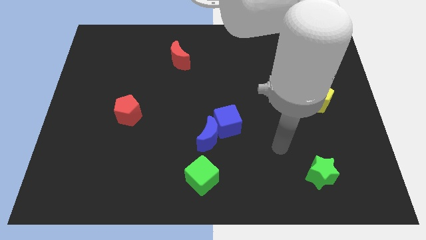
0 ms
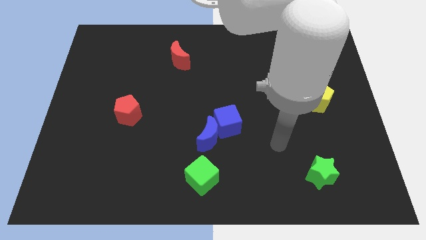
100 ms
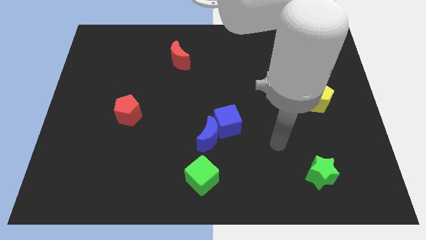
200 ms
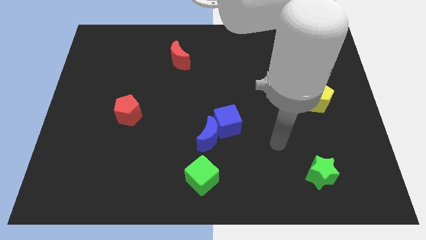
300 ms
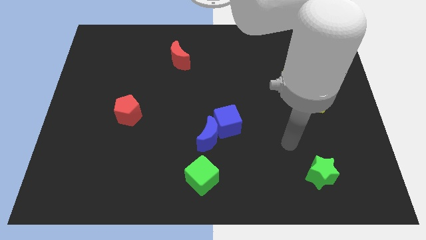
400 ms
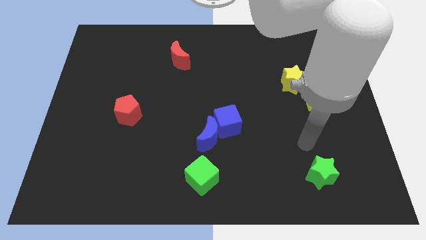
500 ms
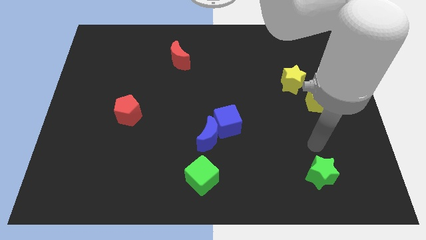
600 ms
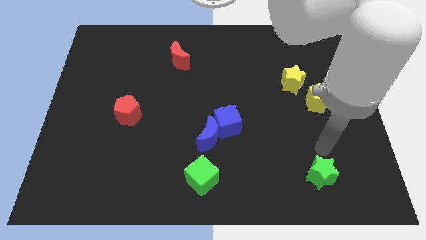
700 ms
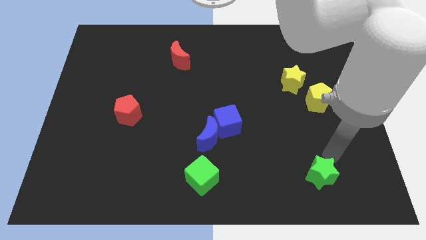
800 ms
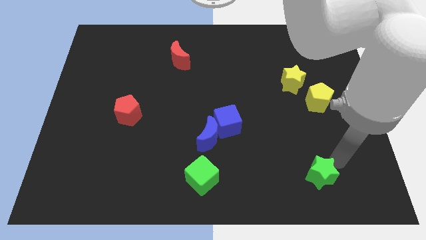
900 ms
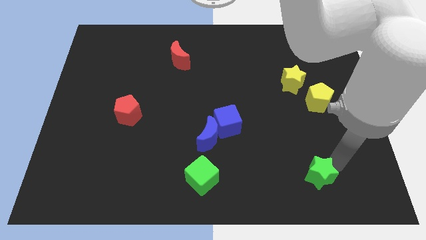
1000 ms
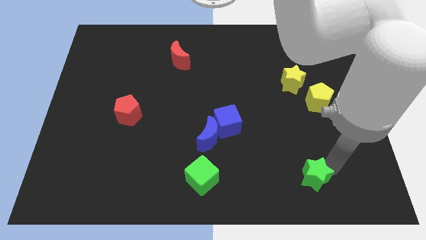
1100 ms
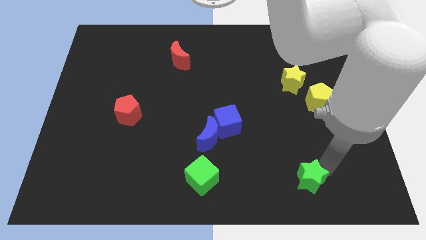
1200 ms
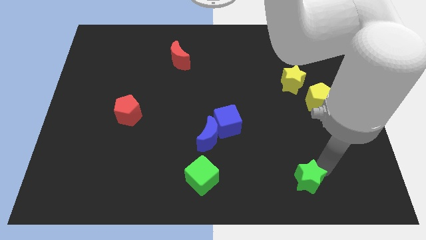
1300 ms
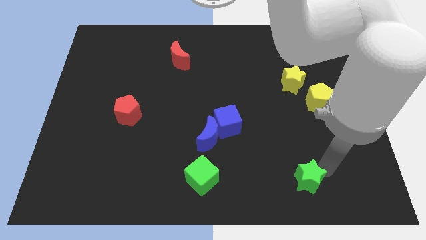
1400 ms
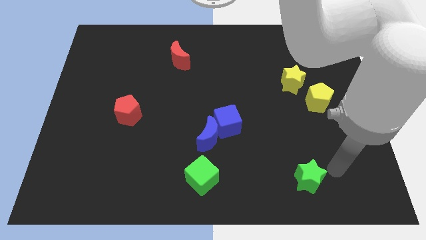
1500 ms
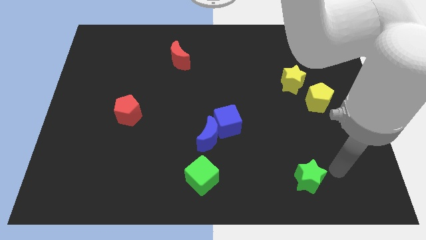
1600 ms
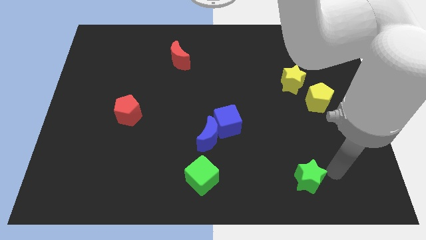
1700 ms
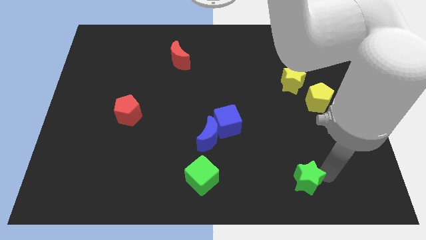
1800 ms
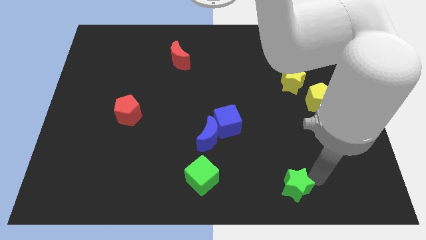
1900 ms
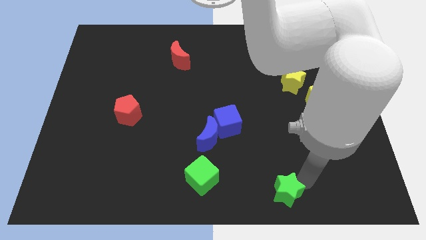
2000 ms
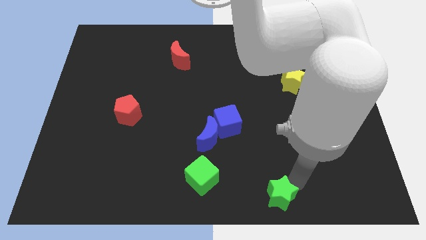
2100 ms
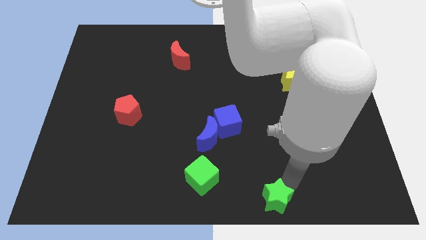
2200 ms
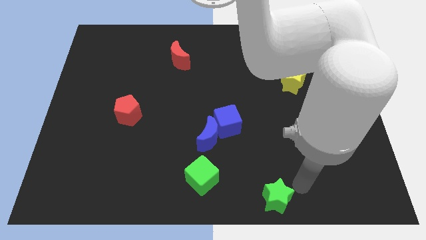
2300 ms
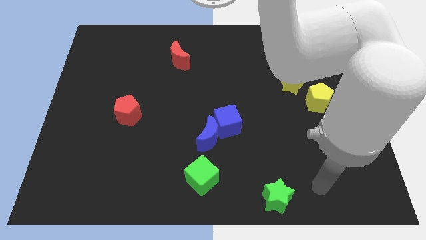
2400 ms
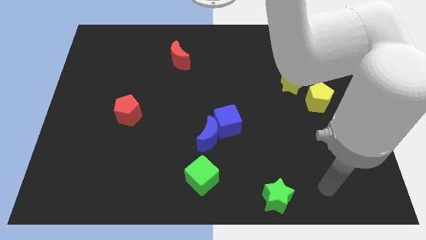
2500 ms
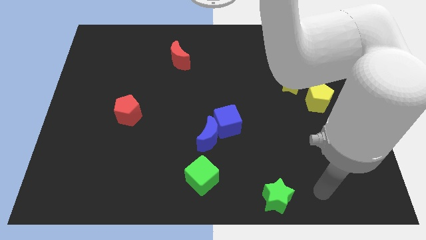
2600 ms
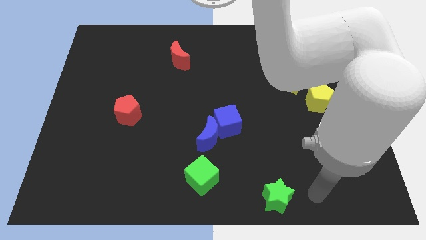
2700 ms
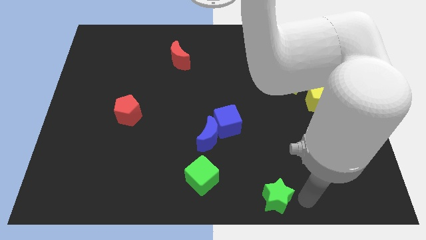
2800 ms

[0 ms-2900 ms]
move the green star to the bottom center of the board

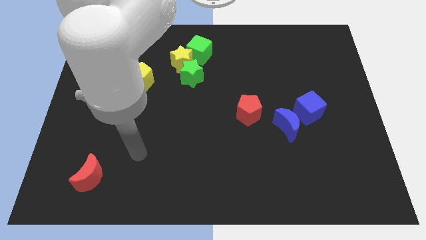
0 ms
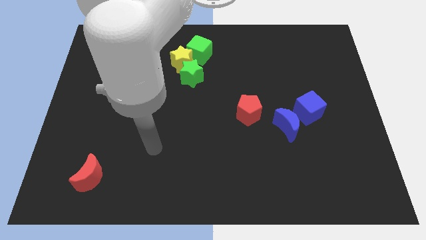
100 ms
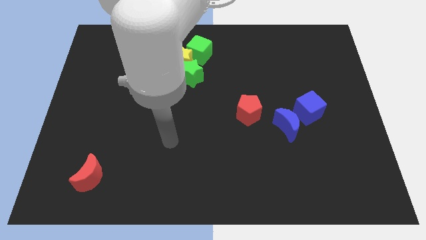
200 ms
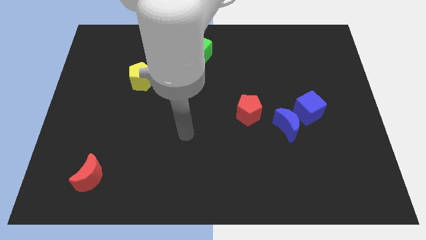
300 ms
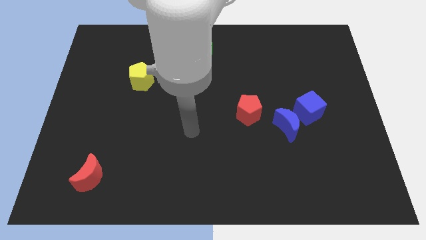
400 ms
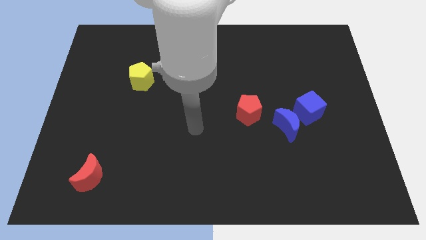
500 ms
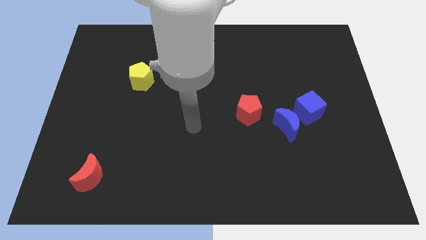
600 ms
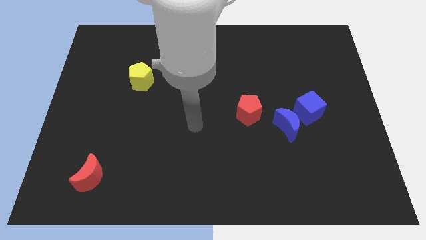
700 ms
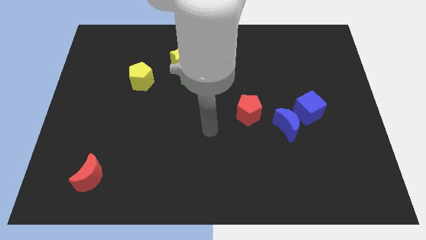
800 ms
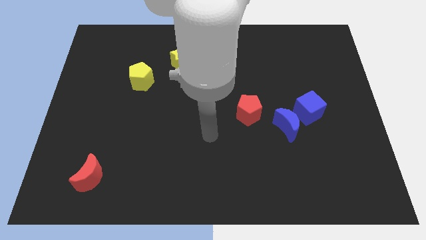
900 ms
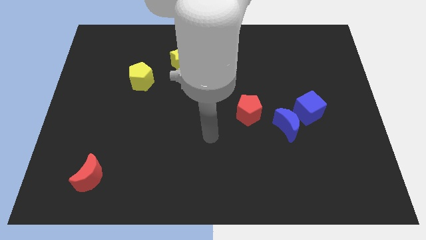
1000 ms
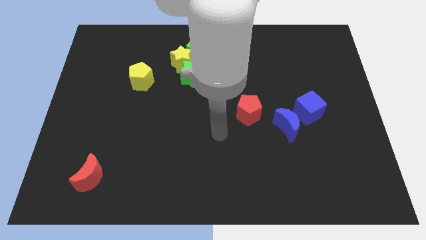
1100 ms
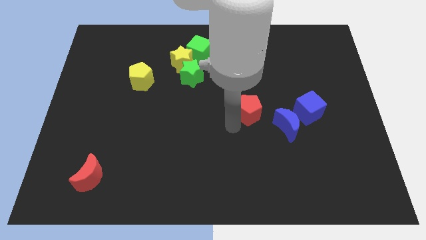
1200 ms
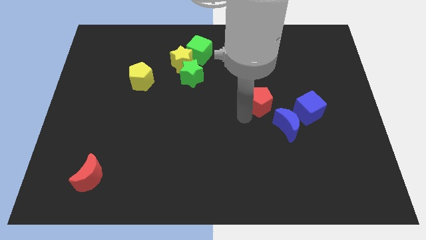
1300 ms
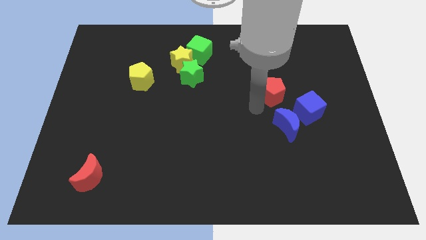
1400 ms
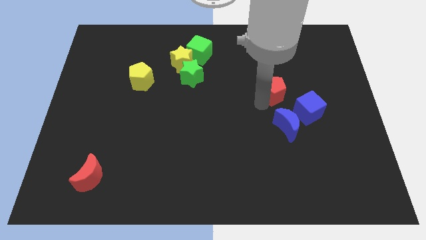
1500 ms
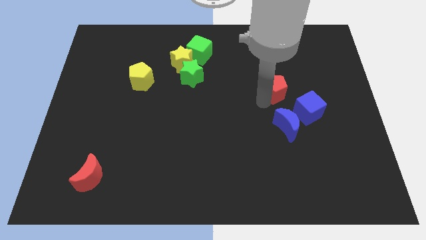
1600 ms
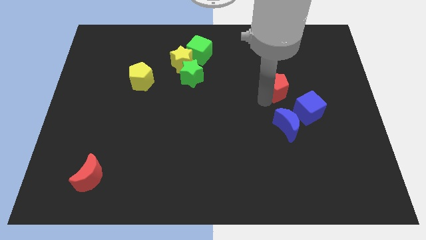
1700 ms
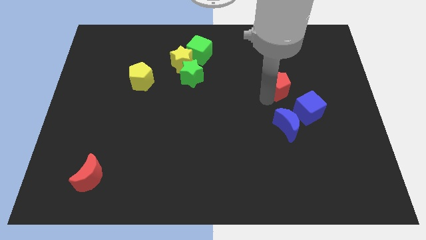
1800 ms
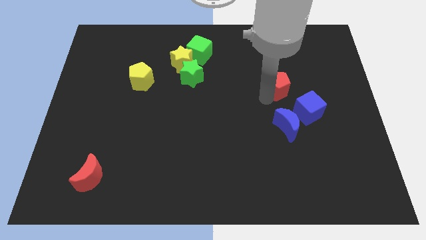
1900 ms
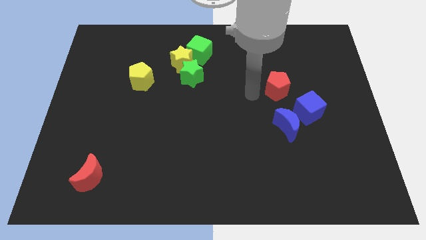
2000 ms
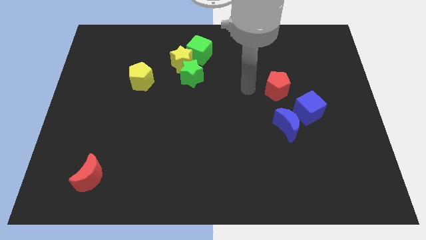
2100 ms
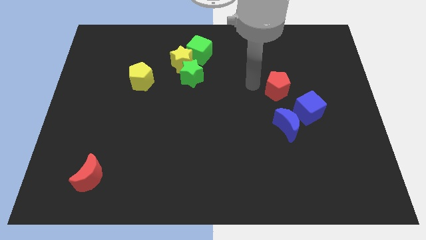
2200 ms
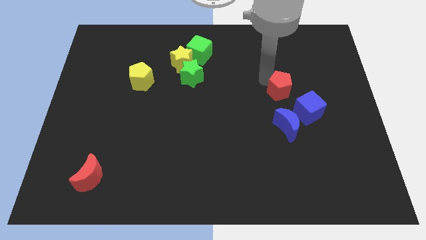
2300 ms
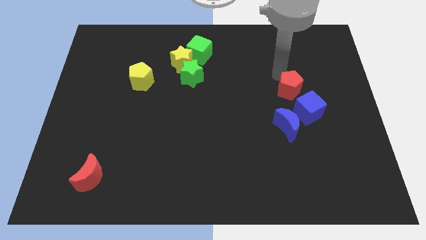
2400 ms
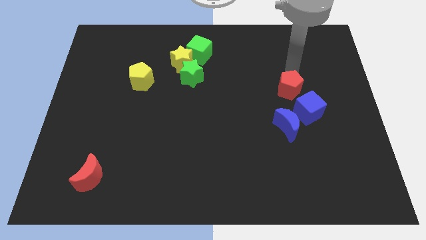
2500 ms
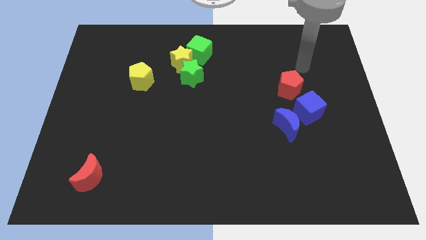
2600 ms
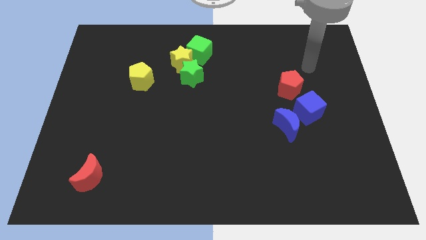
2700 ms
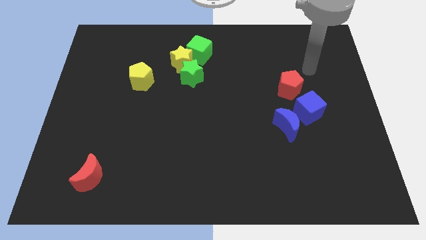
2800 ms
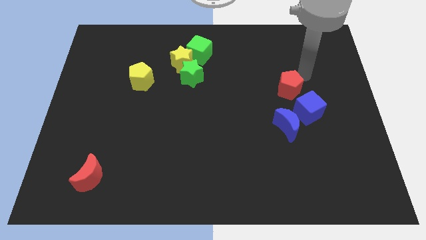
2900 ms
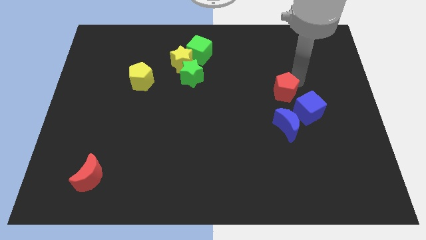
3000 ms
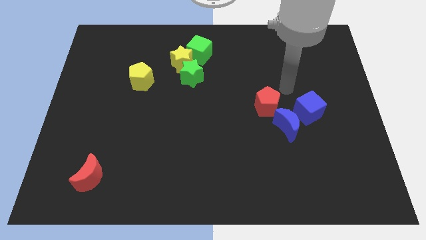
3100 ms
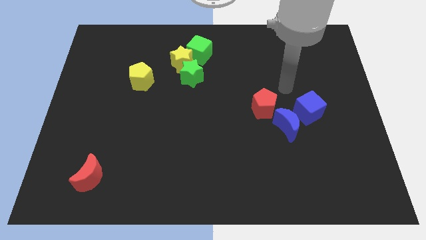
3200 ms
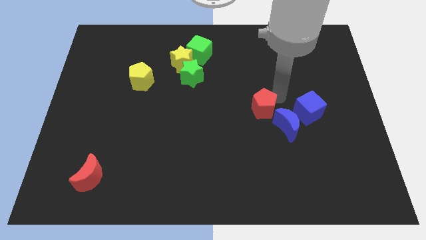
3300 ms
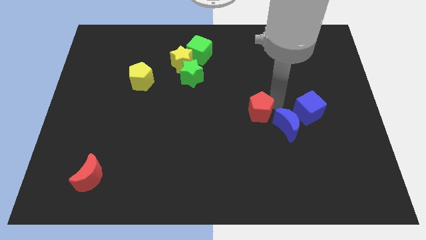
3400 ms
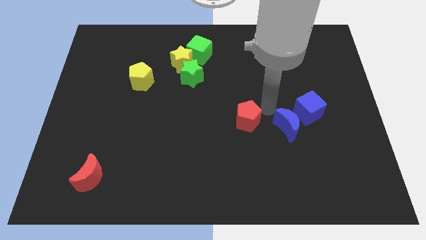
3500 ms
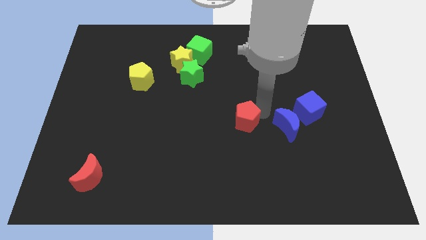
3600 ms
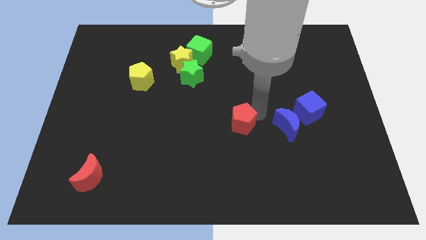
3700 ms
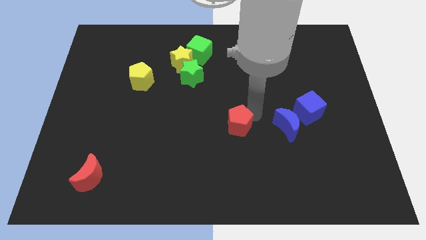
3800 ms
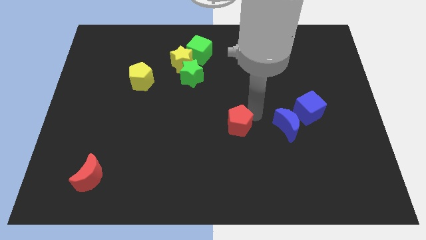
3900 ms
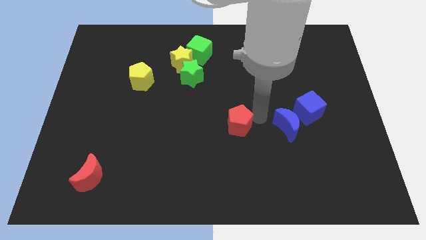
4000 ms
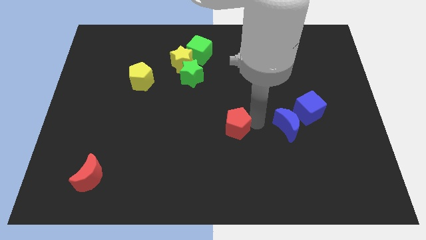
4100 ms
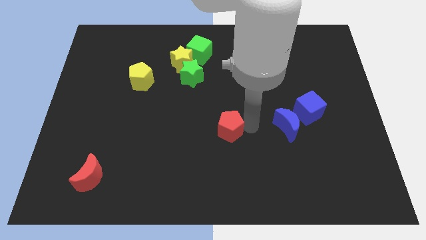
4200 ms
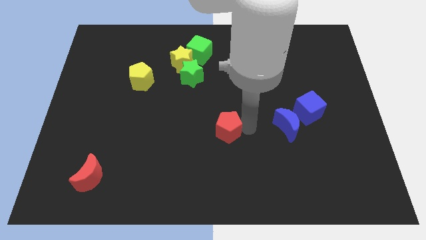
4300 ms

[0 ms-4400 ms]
move the red pentagon to the left of the board

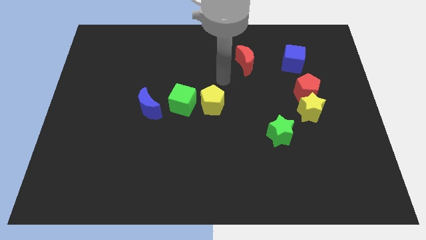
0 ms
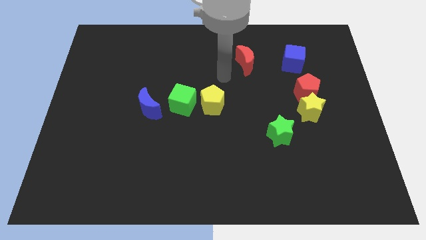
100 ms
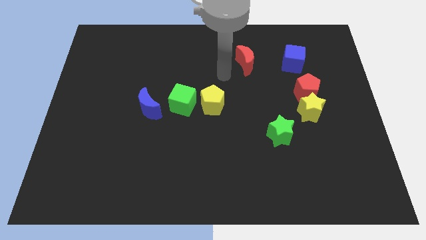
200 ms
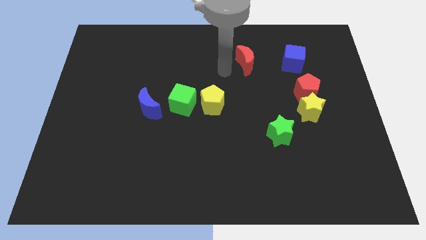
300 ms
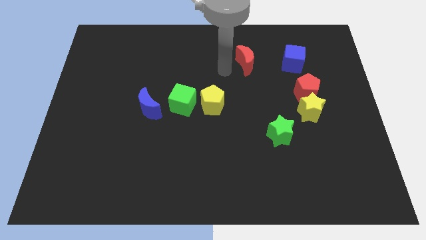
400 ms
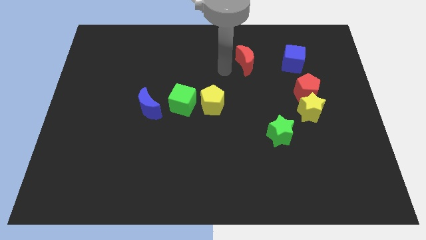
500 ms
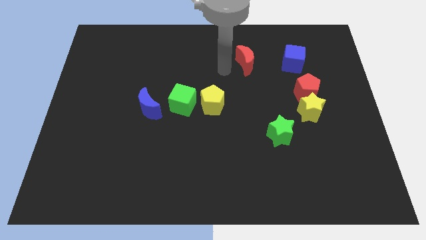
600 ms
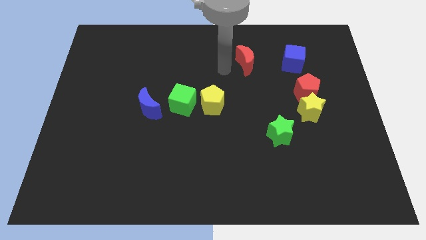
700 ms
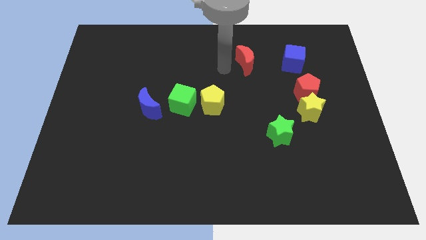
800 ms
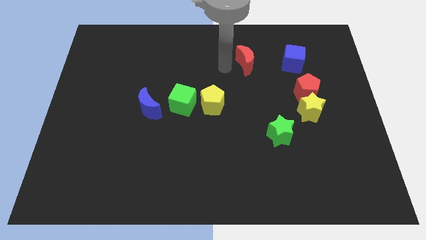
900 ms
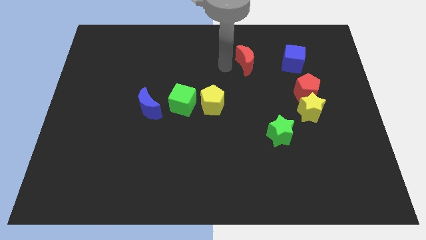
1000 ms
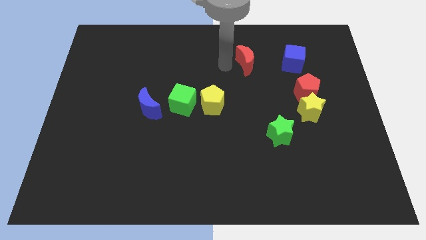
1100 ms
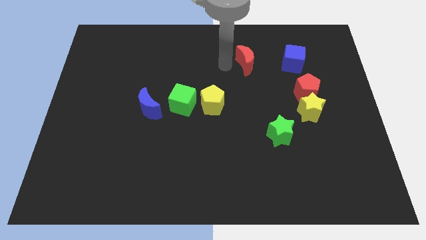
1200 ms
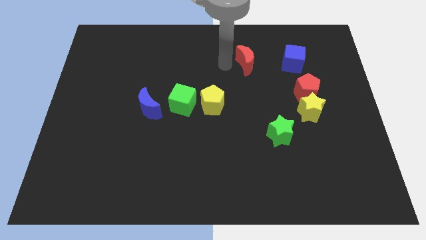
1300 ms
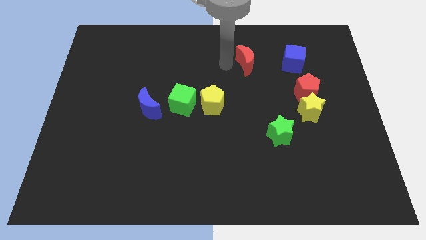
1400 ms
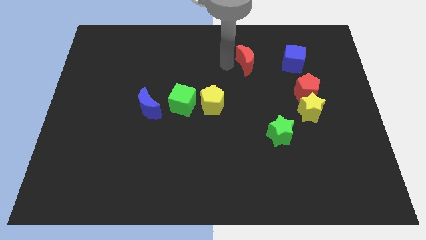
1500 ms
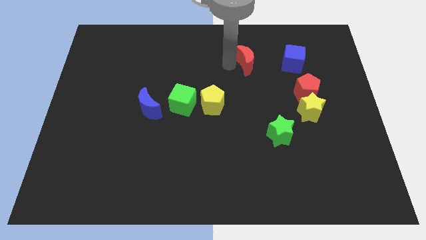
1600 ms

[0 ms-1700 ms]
move the arm away from the yellow pentagon
